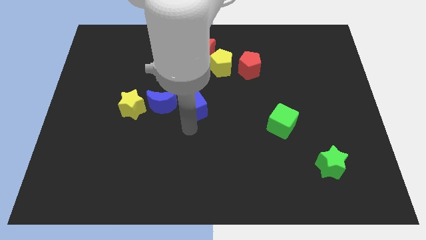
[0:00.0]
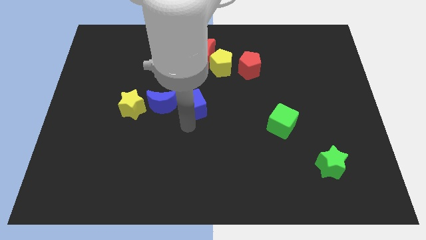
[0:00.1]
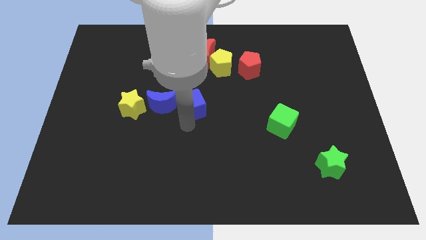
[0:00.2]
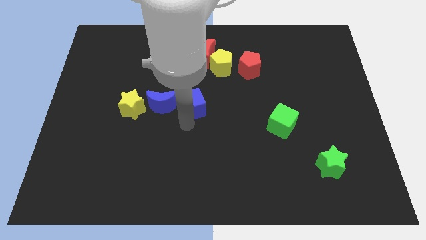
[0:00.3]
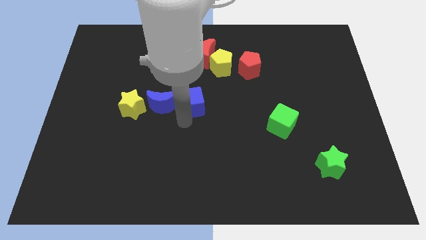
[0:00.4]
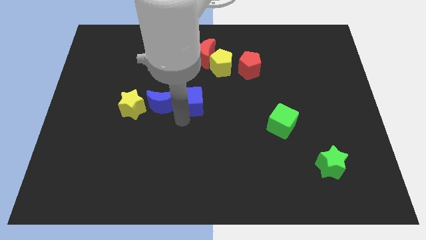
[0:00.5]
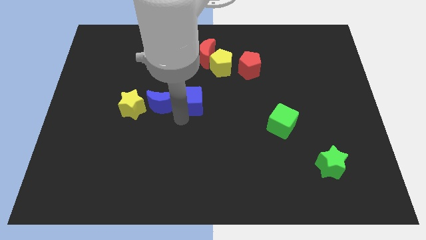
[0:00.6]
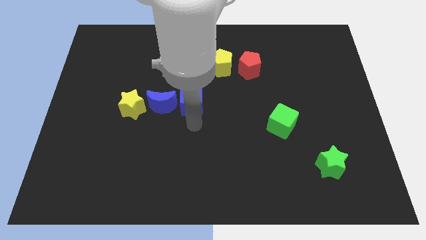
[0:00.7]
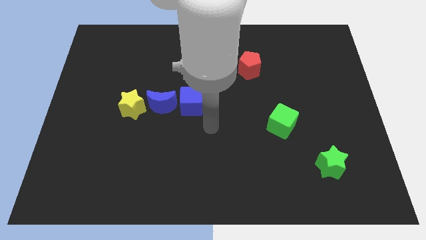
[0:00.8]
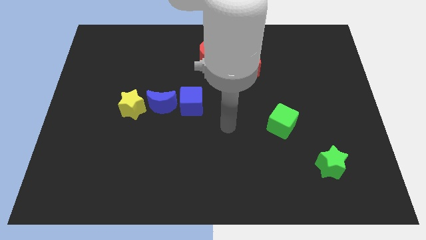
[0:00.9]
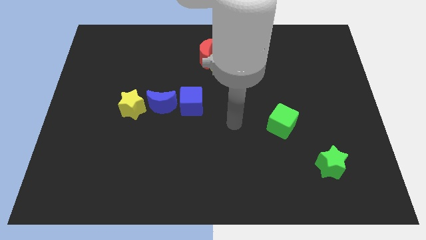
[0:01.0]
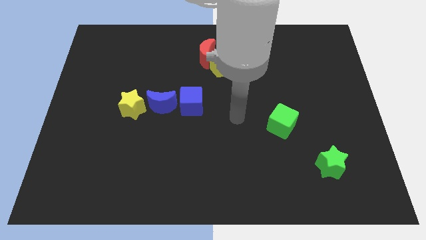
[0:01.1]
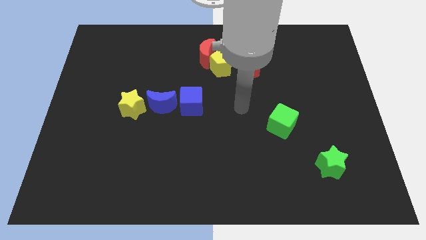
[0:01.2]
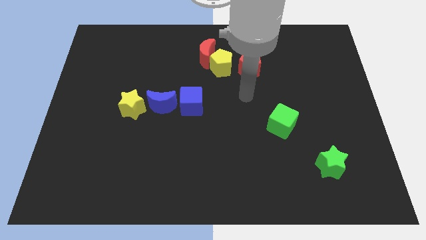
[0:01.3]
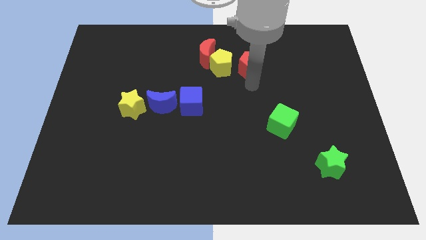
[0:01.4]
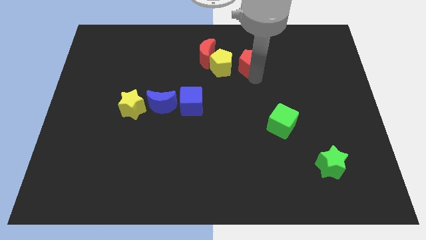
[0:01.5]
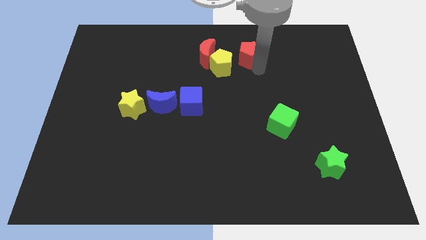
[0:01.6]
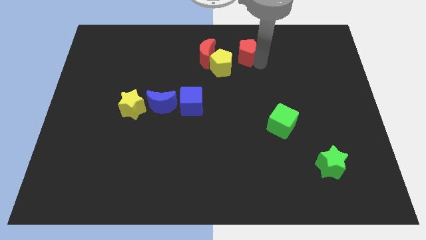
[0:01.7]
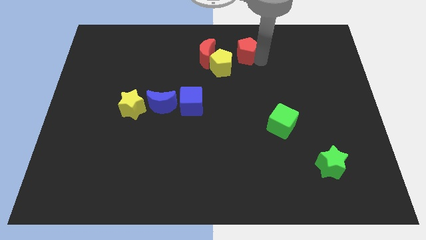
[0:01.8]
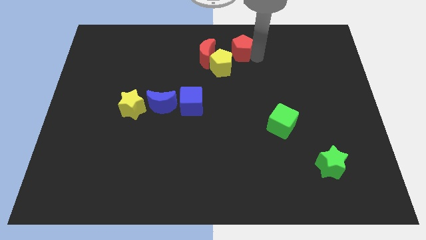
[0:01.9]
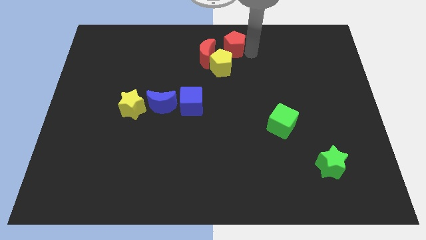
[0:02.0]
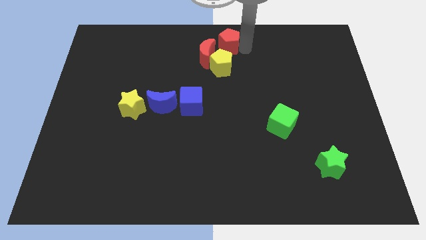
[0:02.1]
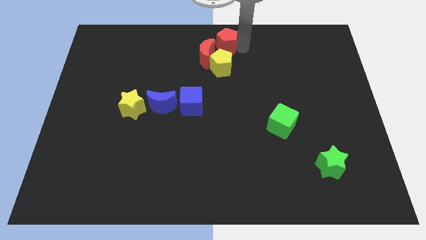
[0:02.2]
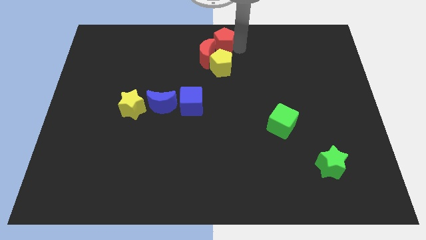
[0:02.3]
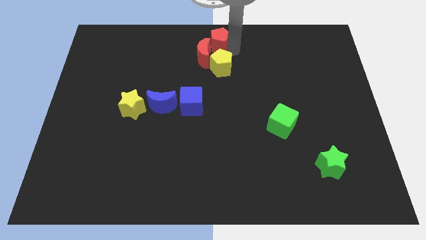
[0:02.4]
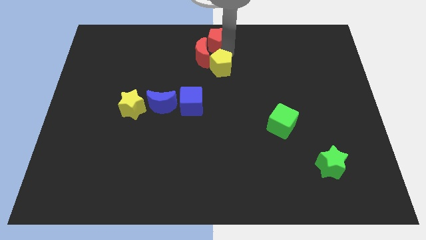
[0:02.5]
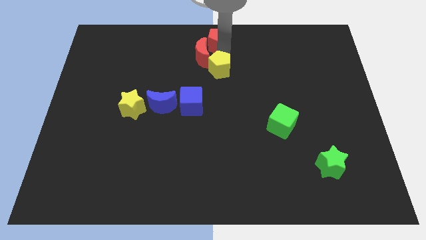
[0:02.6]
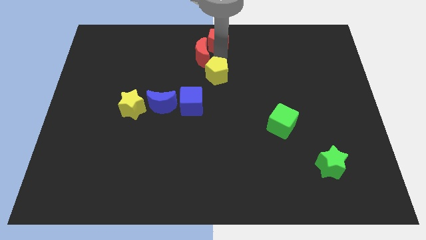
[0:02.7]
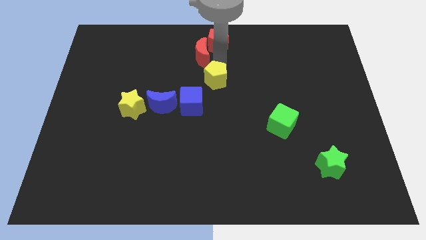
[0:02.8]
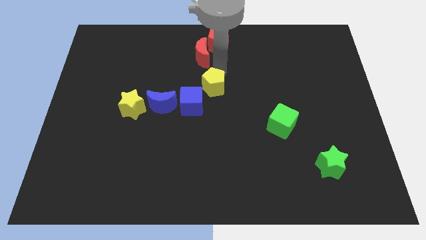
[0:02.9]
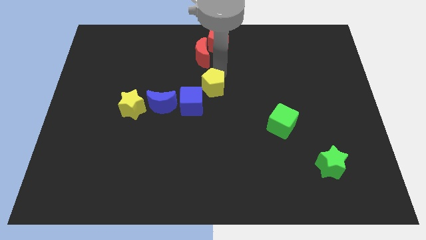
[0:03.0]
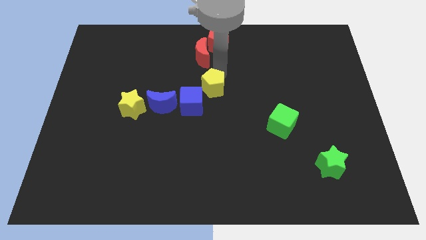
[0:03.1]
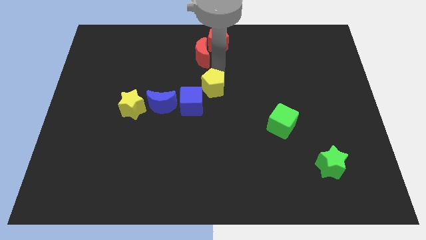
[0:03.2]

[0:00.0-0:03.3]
push the red pentagon into the red moon

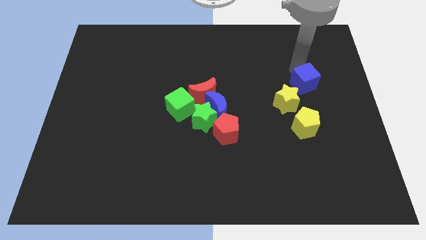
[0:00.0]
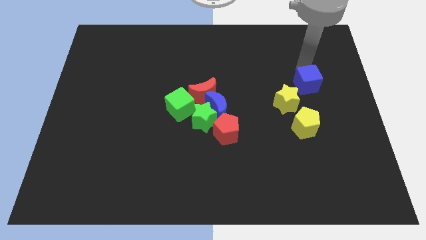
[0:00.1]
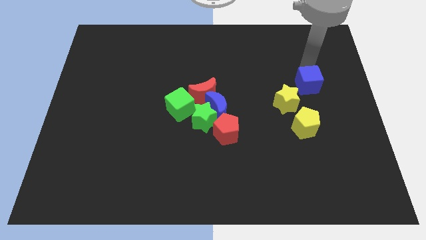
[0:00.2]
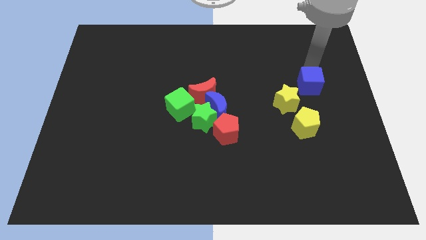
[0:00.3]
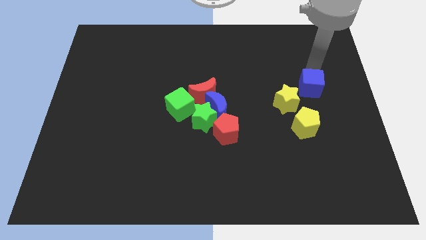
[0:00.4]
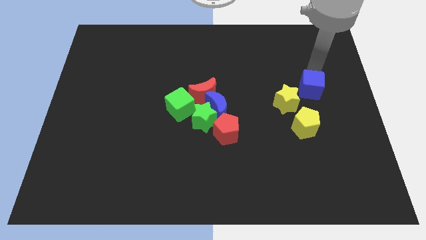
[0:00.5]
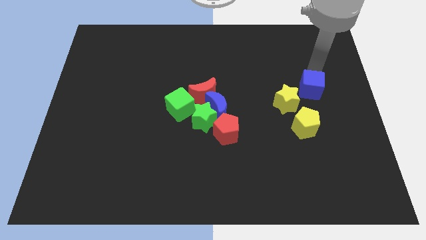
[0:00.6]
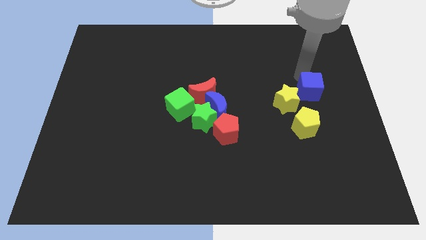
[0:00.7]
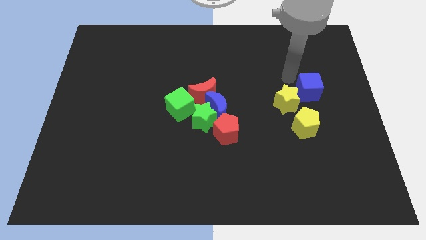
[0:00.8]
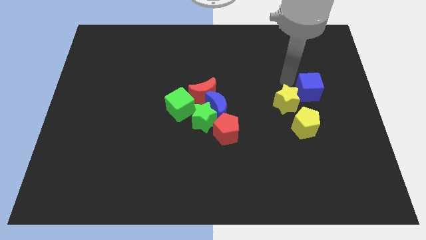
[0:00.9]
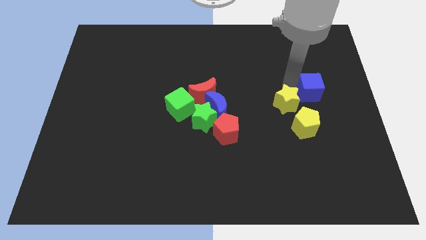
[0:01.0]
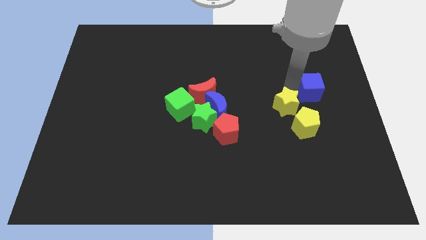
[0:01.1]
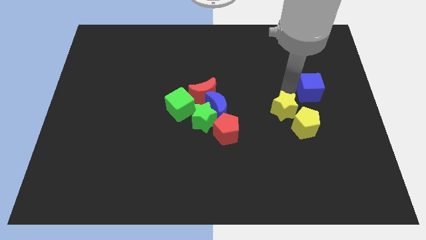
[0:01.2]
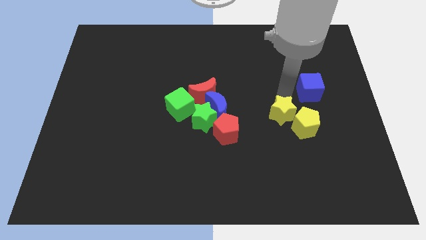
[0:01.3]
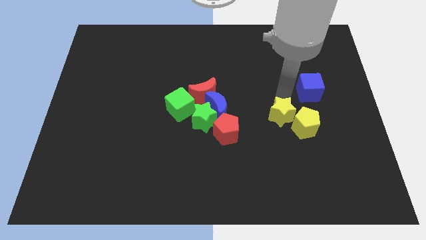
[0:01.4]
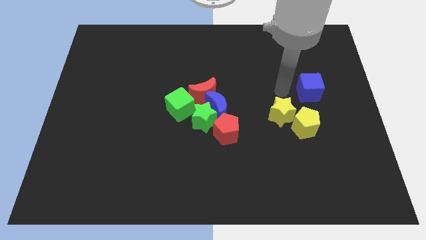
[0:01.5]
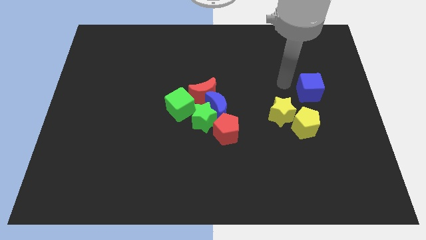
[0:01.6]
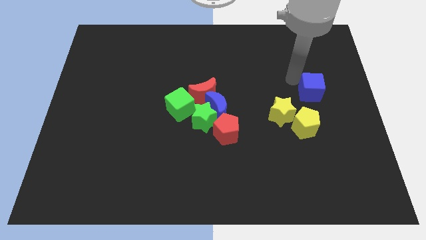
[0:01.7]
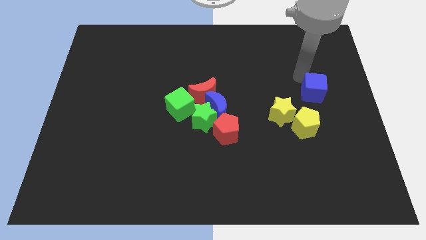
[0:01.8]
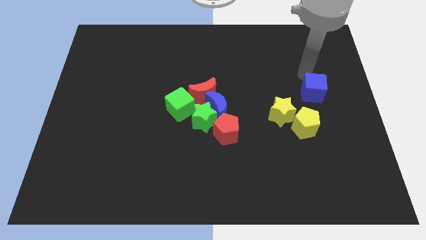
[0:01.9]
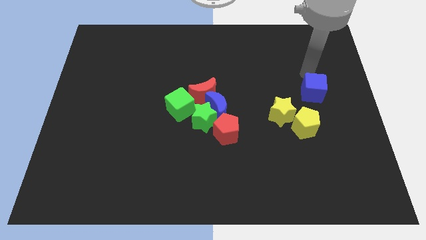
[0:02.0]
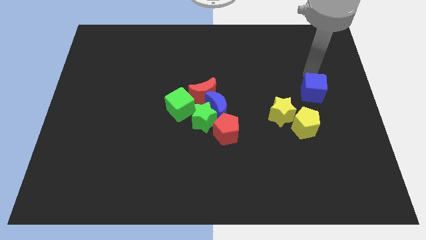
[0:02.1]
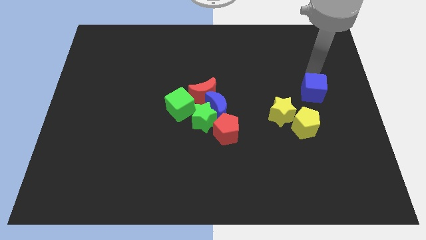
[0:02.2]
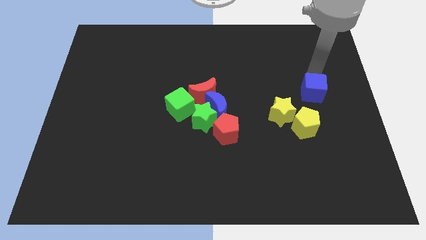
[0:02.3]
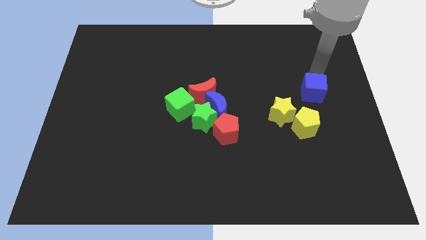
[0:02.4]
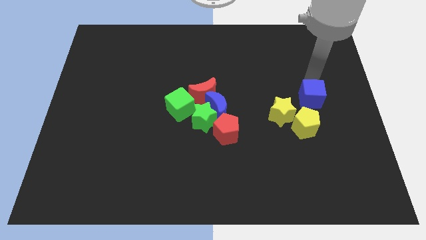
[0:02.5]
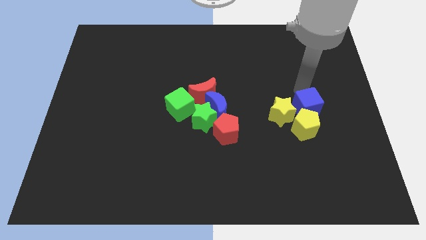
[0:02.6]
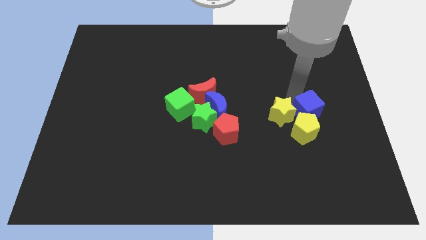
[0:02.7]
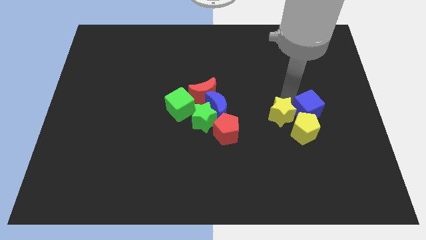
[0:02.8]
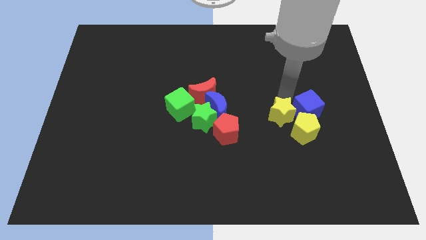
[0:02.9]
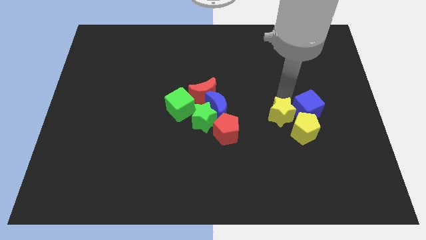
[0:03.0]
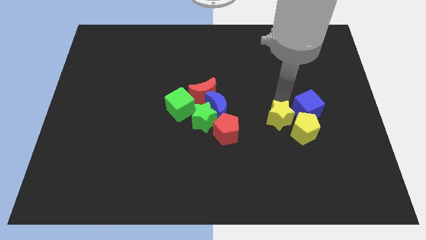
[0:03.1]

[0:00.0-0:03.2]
push blue cube into yellow star and yellow pentagon

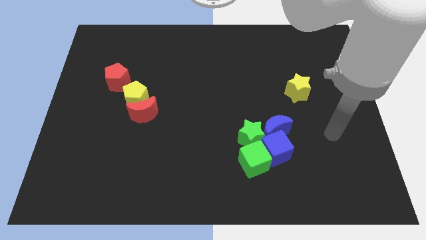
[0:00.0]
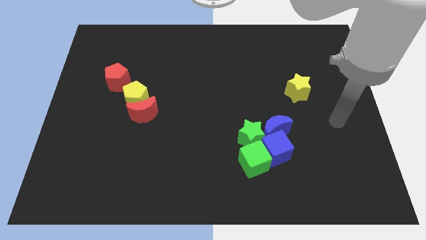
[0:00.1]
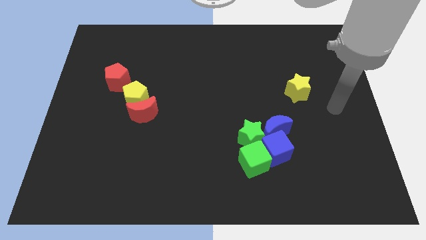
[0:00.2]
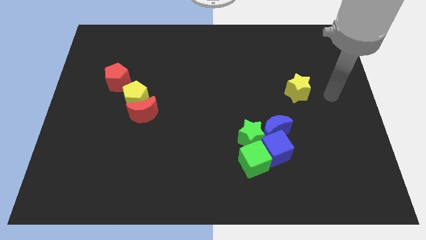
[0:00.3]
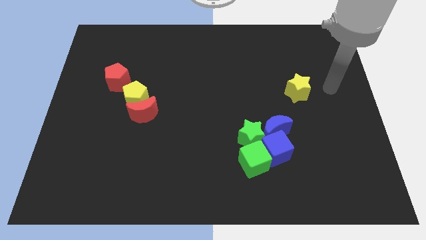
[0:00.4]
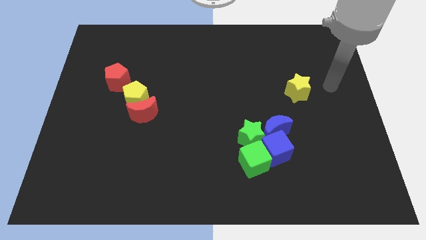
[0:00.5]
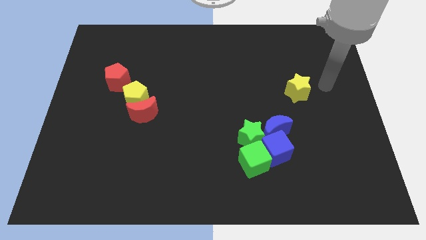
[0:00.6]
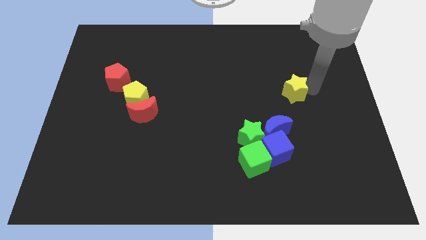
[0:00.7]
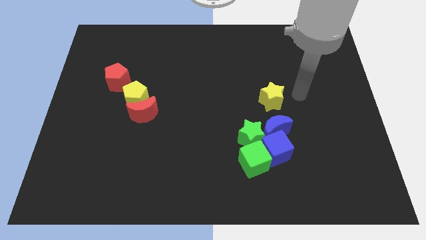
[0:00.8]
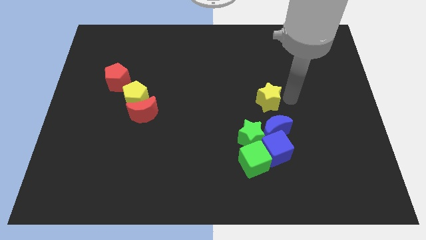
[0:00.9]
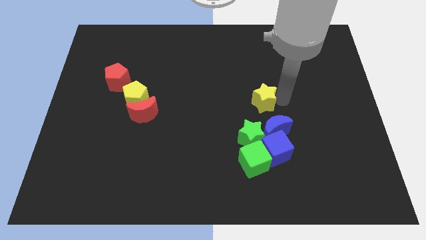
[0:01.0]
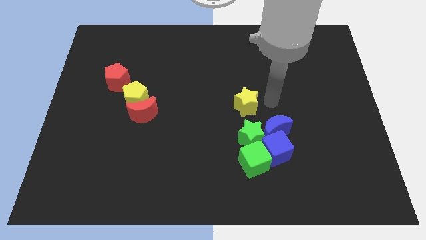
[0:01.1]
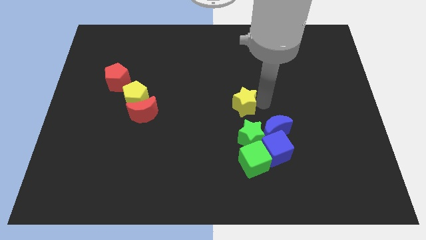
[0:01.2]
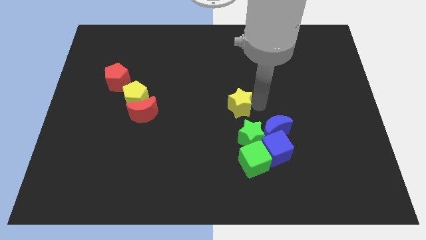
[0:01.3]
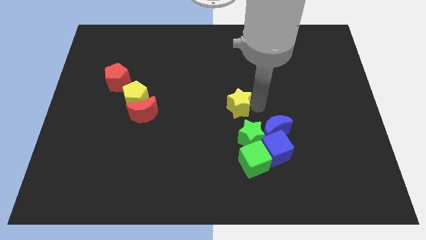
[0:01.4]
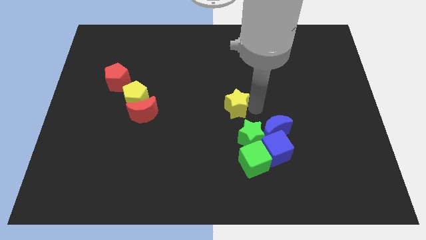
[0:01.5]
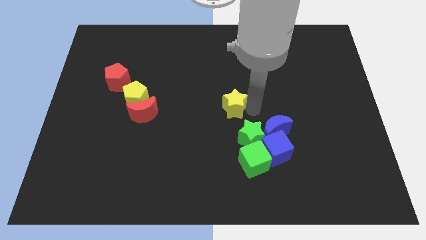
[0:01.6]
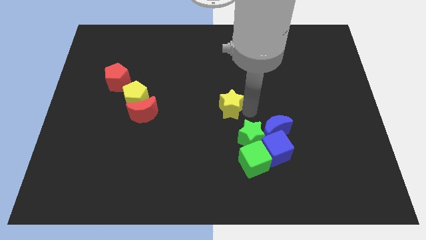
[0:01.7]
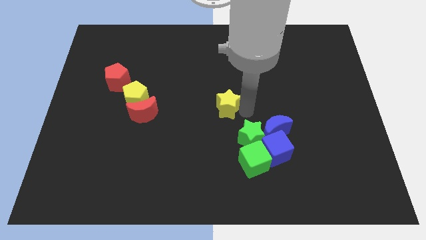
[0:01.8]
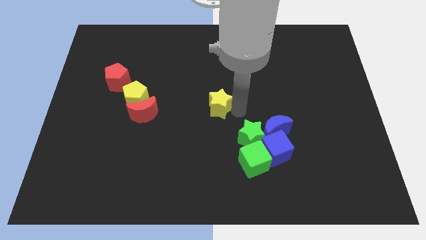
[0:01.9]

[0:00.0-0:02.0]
place the yellow star at the center of the board

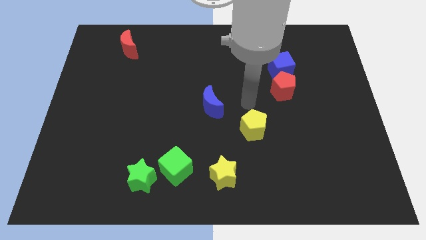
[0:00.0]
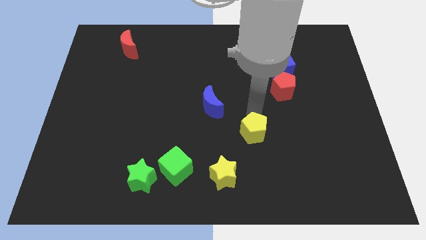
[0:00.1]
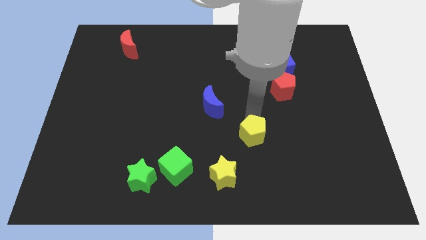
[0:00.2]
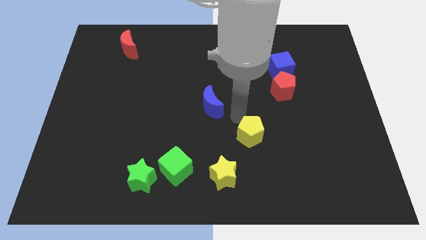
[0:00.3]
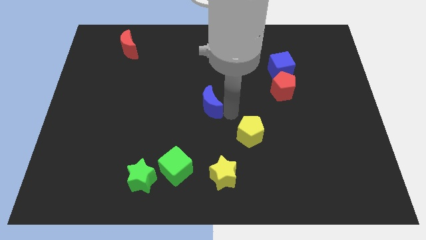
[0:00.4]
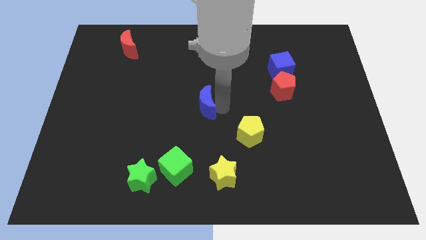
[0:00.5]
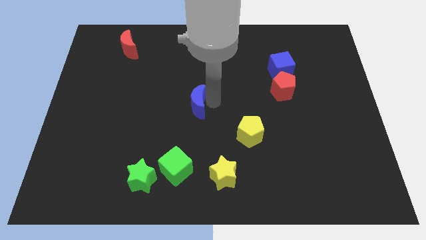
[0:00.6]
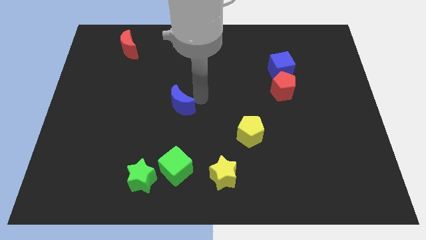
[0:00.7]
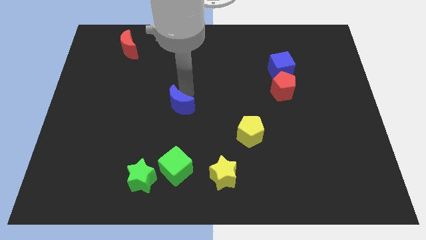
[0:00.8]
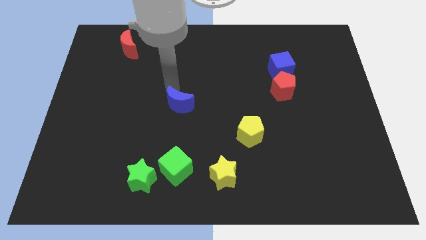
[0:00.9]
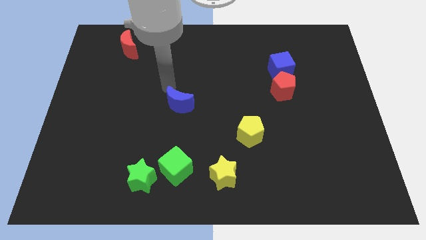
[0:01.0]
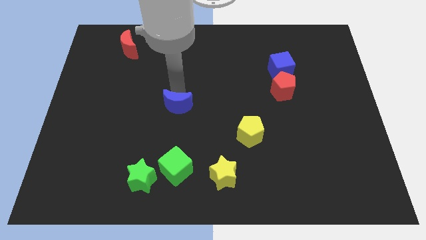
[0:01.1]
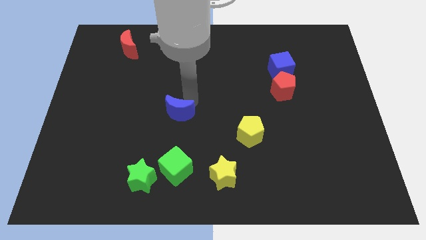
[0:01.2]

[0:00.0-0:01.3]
put the blue moon vertically at the top of the green cube
